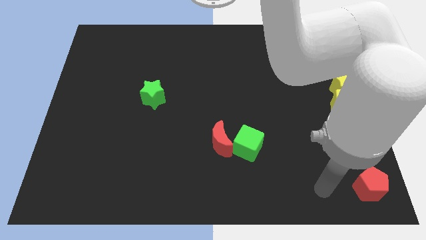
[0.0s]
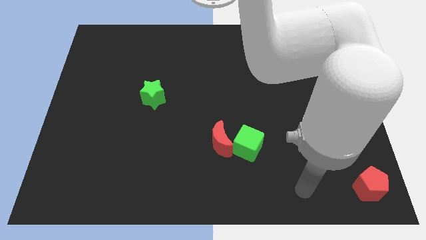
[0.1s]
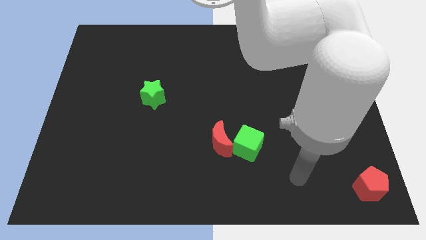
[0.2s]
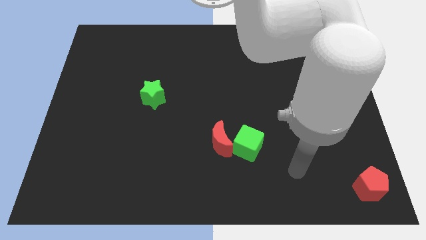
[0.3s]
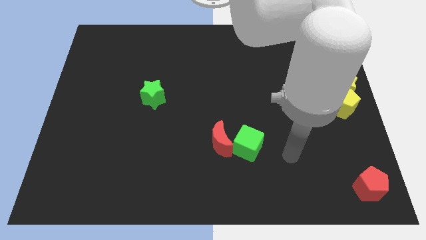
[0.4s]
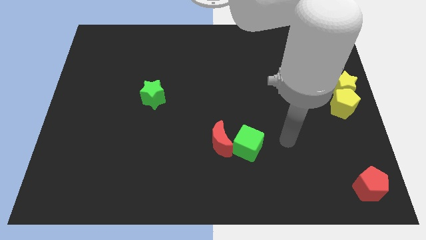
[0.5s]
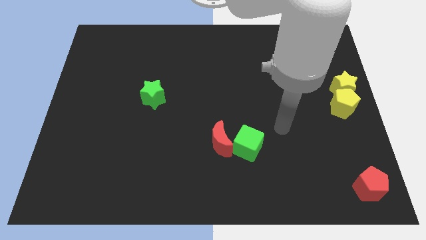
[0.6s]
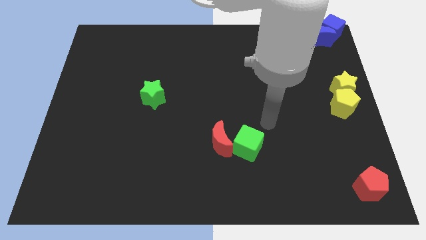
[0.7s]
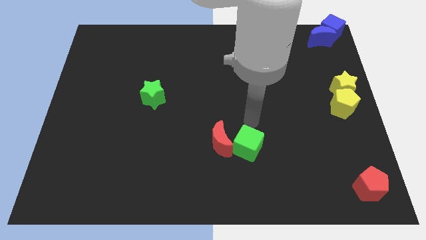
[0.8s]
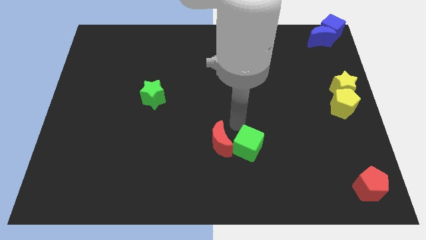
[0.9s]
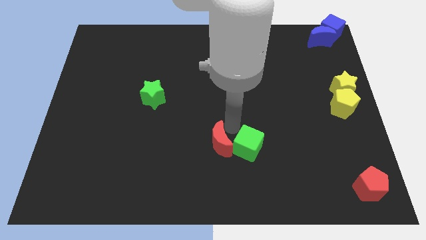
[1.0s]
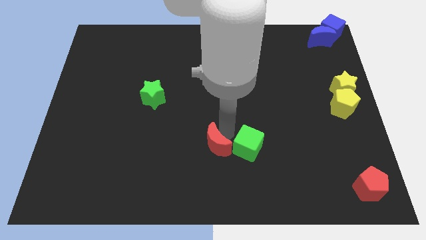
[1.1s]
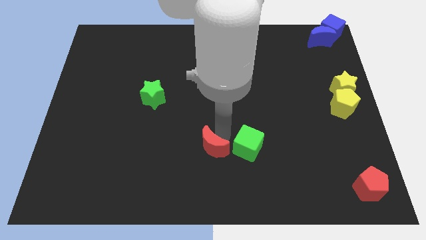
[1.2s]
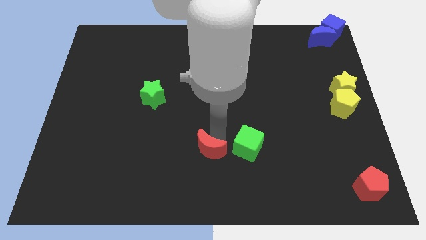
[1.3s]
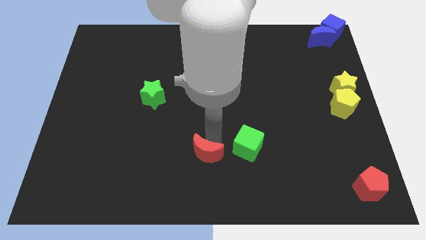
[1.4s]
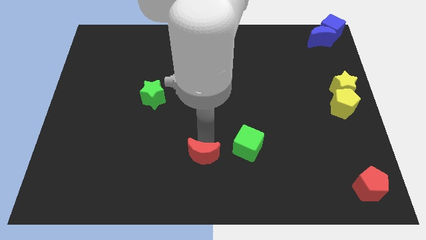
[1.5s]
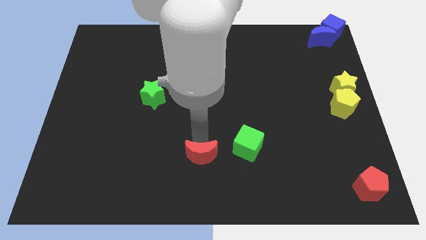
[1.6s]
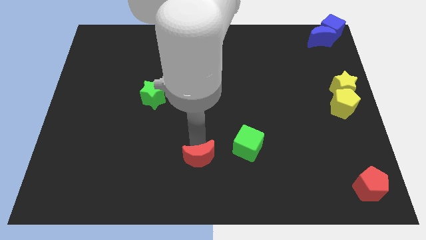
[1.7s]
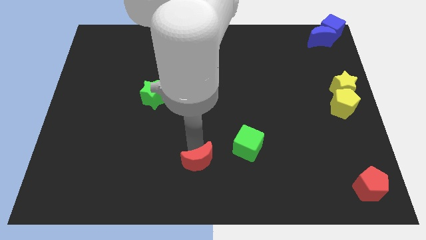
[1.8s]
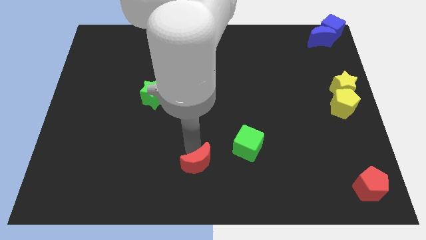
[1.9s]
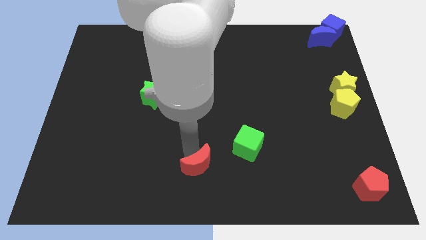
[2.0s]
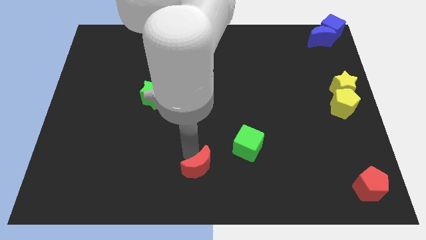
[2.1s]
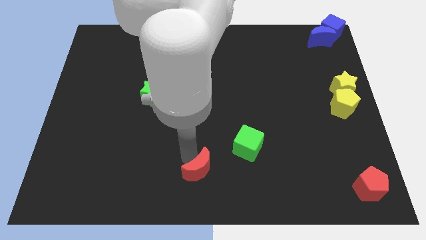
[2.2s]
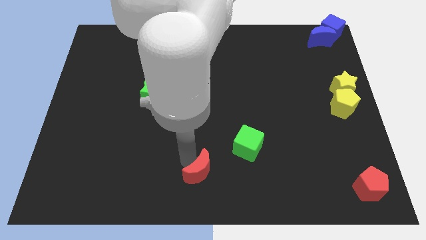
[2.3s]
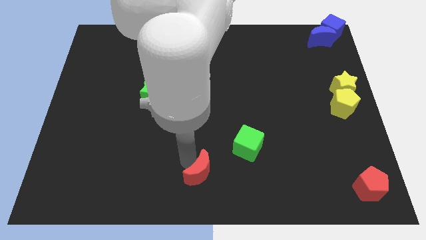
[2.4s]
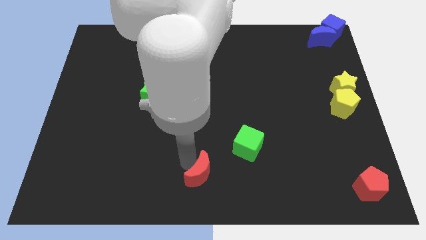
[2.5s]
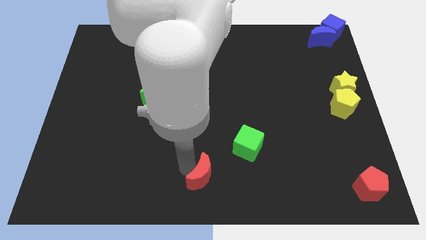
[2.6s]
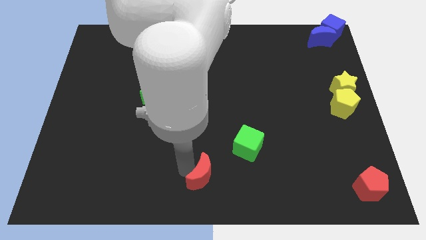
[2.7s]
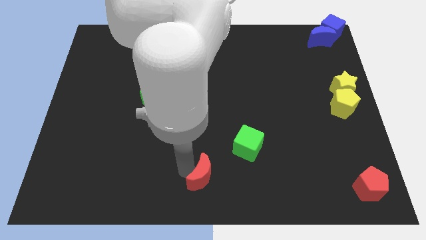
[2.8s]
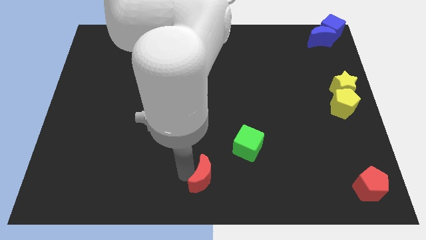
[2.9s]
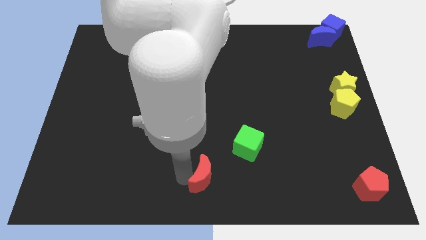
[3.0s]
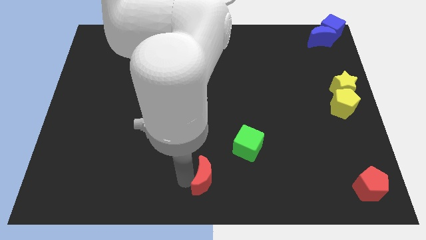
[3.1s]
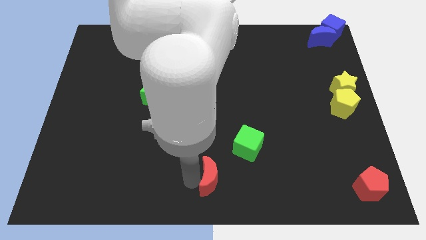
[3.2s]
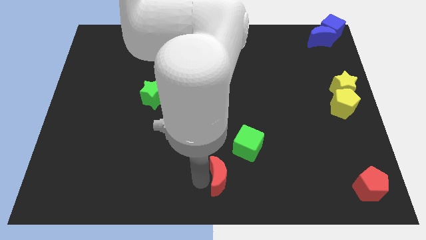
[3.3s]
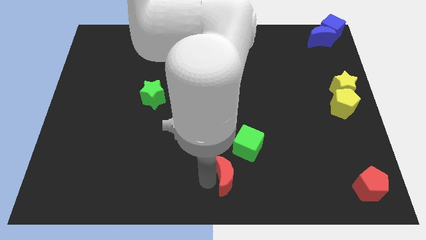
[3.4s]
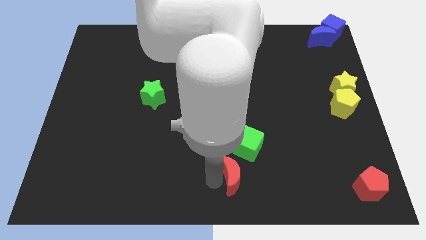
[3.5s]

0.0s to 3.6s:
move the red crescent away from green cube

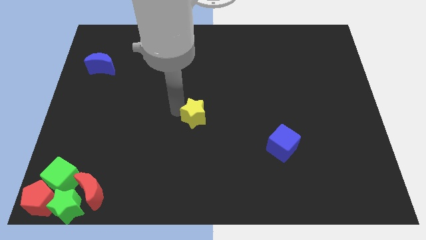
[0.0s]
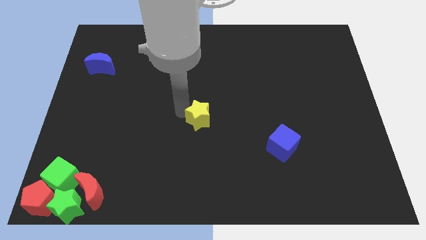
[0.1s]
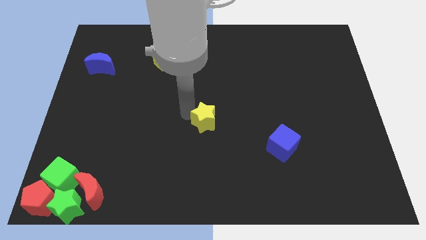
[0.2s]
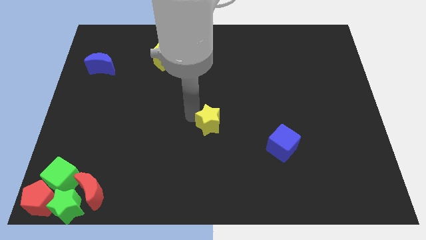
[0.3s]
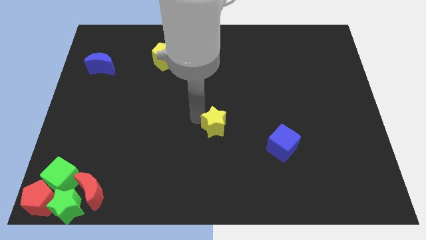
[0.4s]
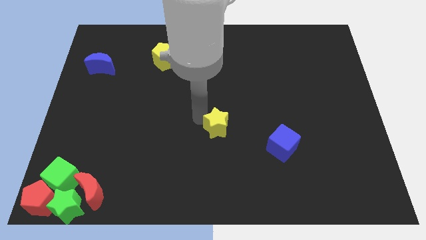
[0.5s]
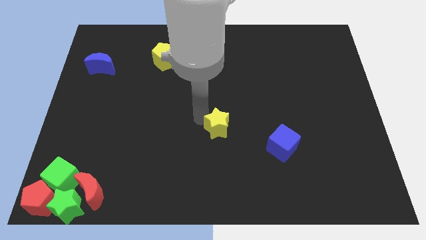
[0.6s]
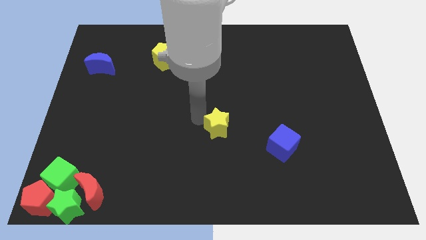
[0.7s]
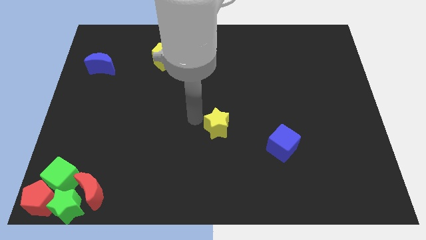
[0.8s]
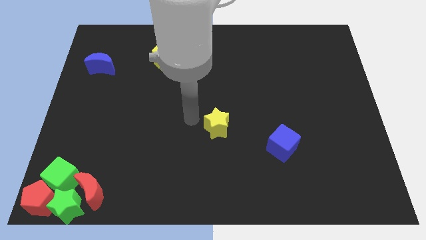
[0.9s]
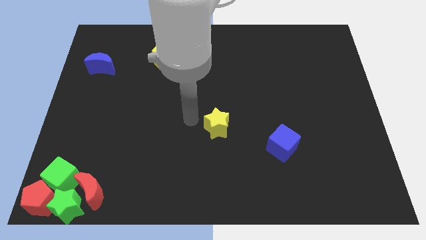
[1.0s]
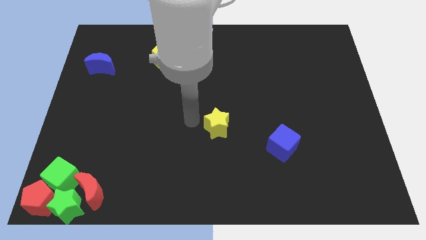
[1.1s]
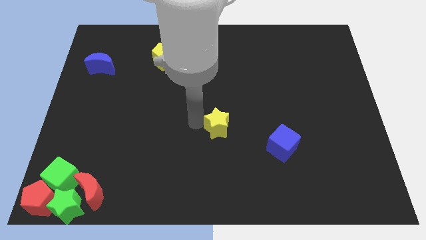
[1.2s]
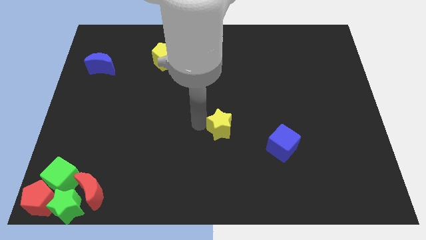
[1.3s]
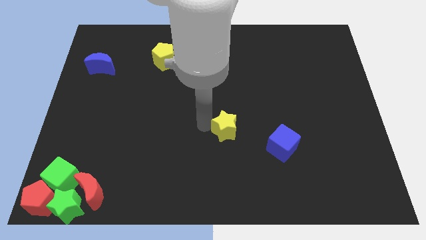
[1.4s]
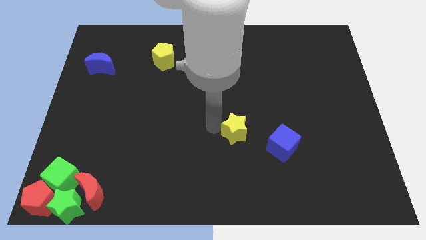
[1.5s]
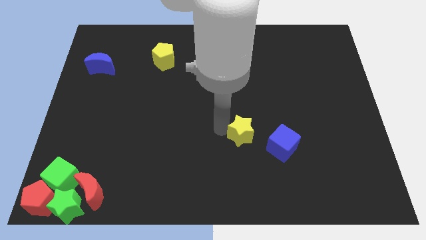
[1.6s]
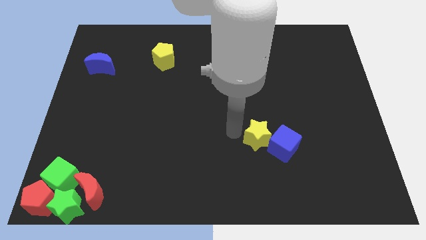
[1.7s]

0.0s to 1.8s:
push the yellow star towards the blue cube

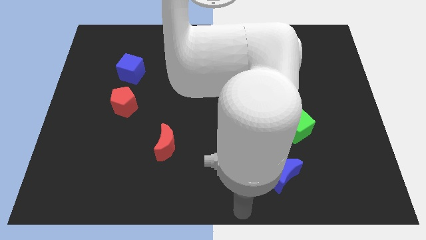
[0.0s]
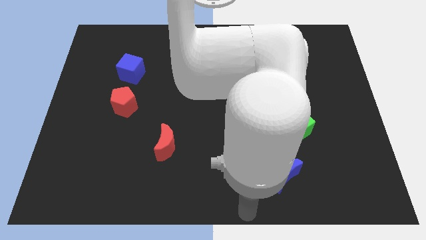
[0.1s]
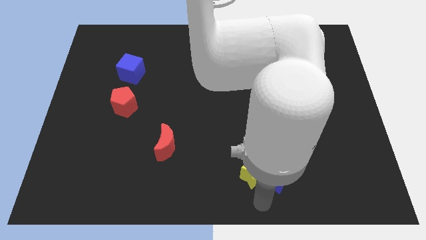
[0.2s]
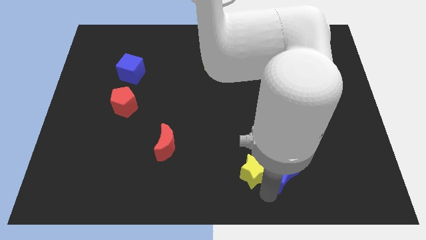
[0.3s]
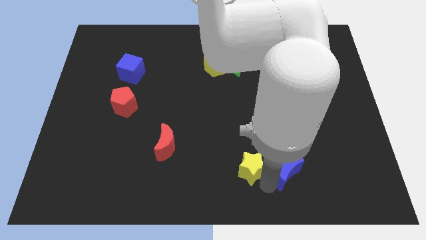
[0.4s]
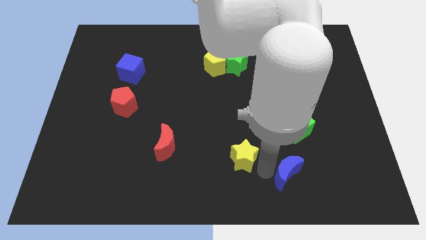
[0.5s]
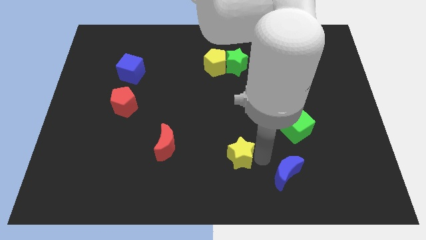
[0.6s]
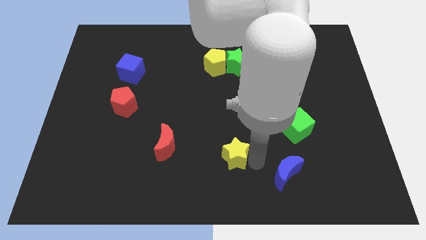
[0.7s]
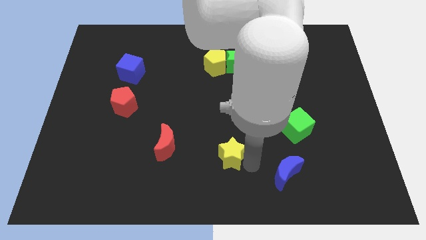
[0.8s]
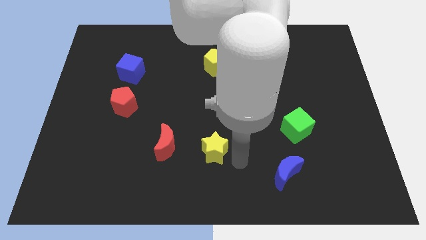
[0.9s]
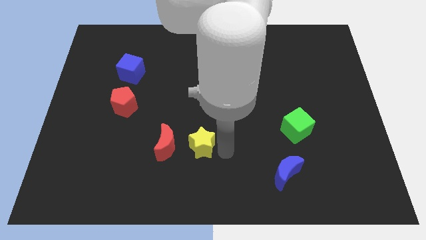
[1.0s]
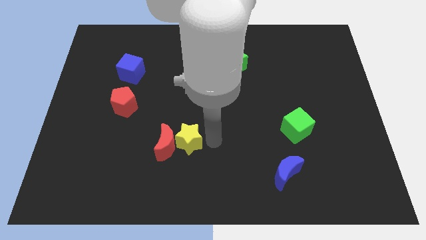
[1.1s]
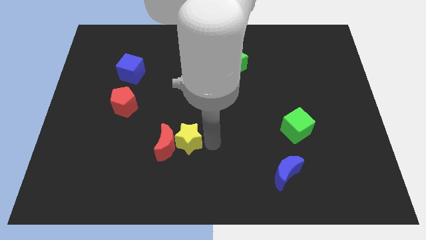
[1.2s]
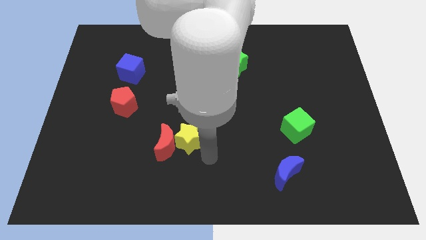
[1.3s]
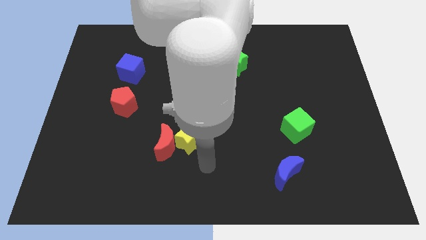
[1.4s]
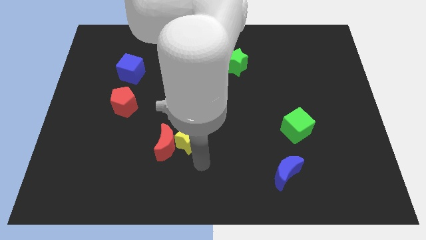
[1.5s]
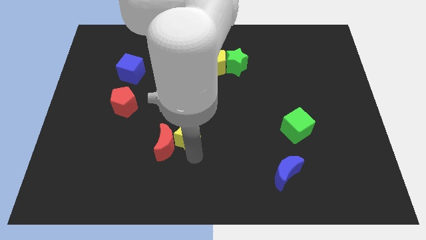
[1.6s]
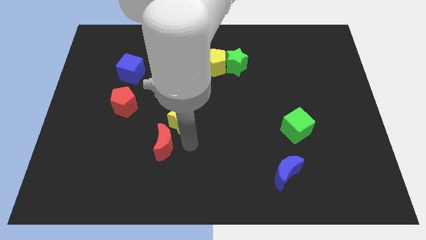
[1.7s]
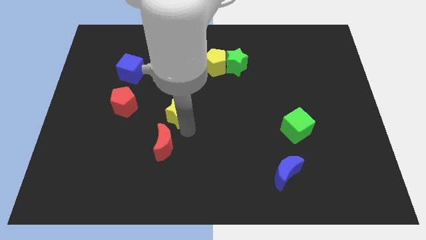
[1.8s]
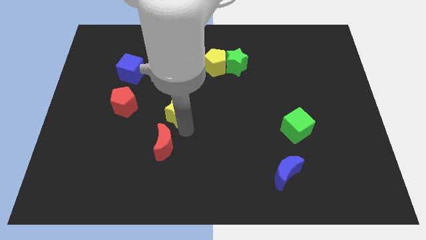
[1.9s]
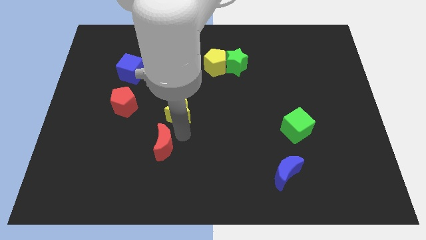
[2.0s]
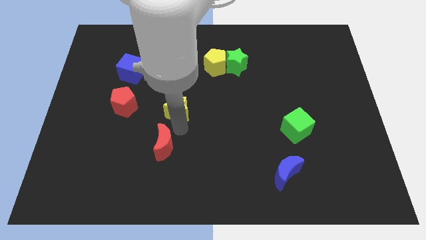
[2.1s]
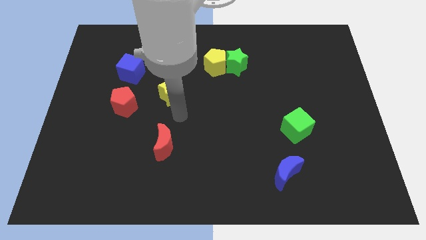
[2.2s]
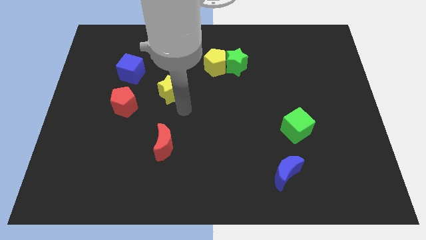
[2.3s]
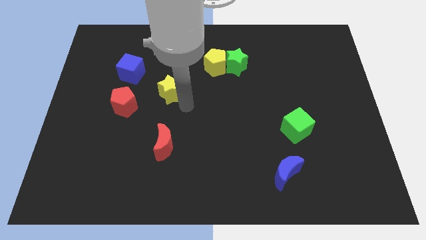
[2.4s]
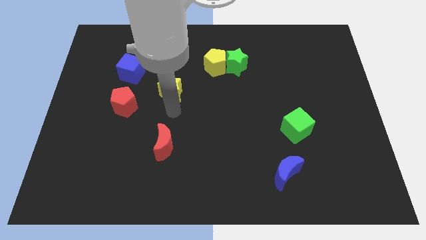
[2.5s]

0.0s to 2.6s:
move yellow star vertically above red moon

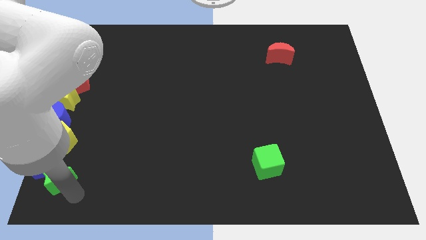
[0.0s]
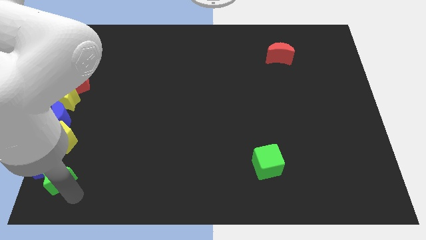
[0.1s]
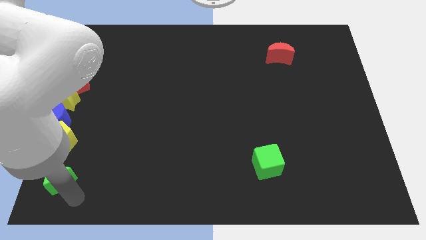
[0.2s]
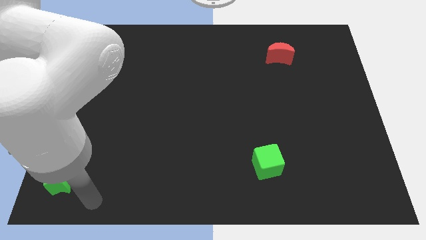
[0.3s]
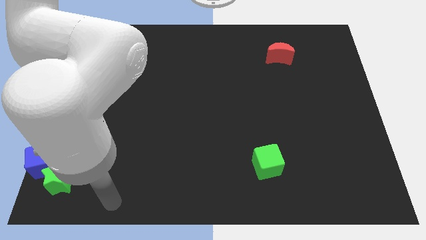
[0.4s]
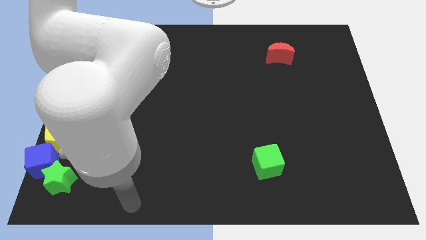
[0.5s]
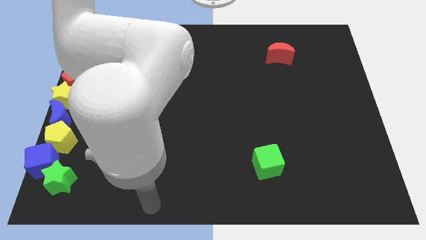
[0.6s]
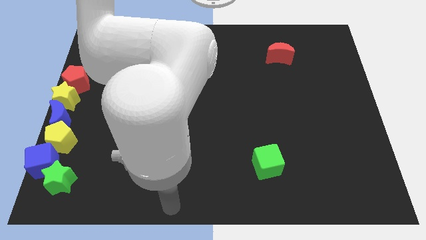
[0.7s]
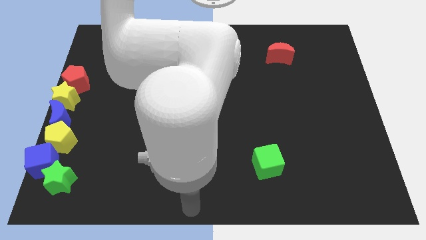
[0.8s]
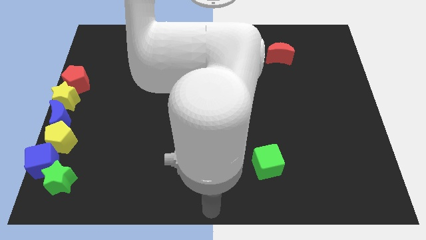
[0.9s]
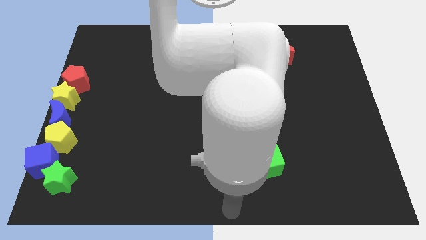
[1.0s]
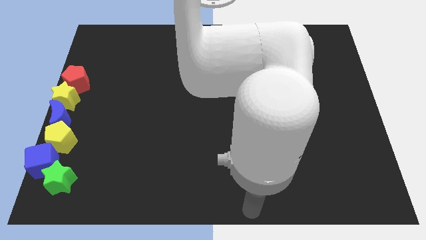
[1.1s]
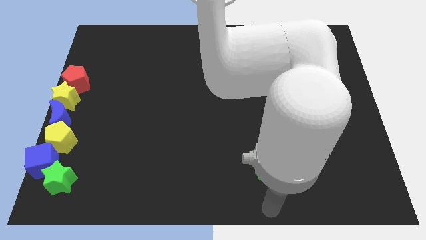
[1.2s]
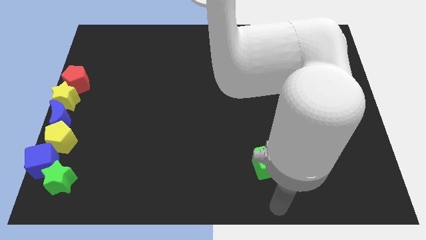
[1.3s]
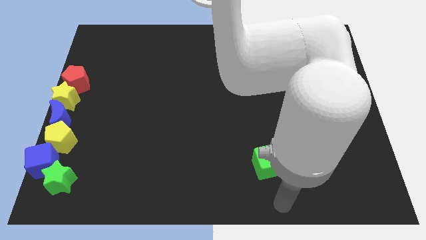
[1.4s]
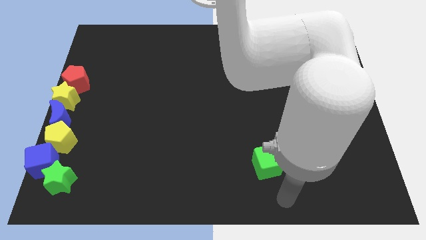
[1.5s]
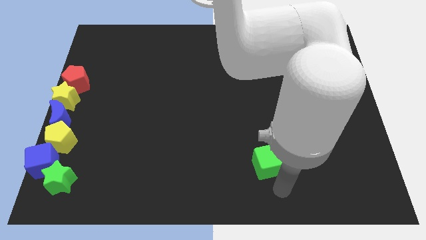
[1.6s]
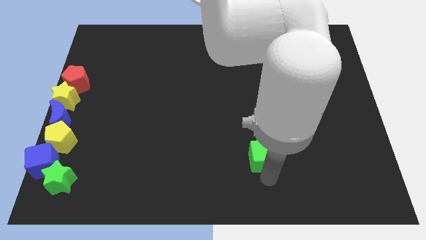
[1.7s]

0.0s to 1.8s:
point the arm below the green cube
